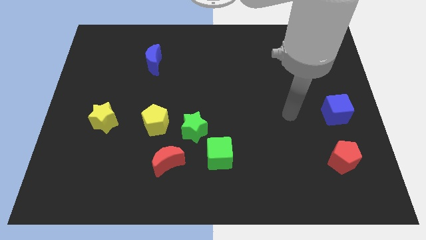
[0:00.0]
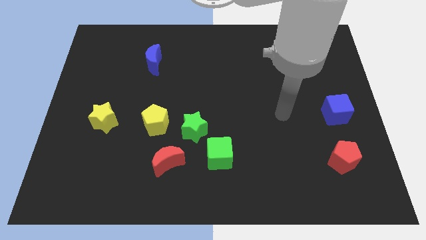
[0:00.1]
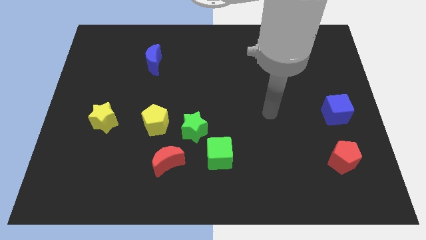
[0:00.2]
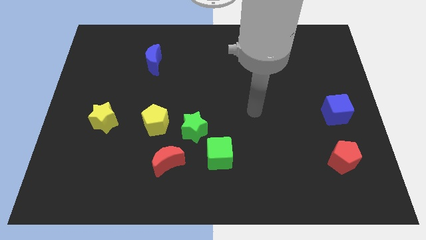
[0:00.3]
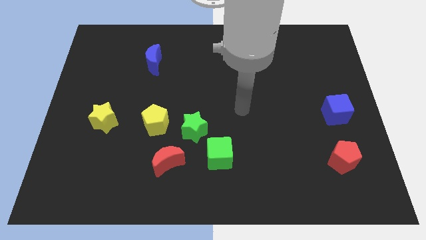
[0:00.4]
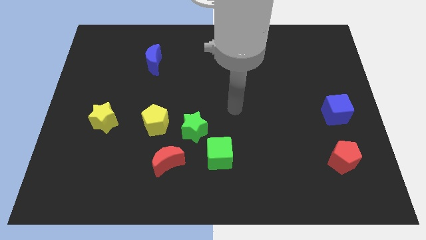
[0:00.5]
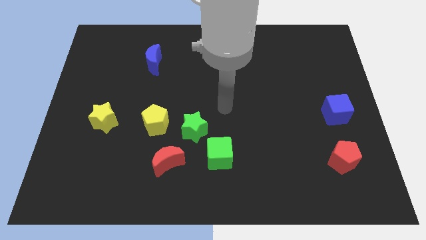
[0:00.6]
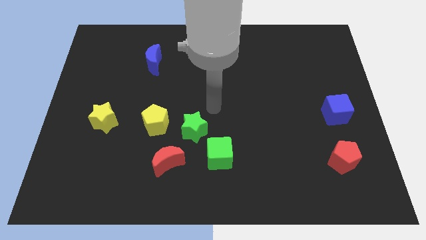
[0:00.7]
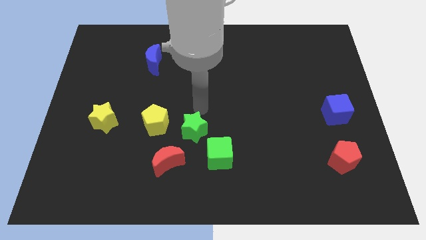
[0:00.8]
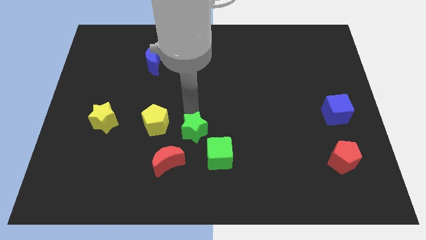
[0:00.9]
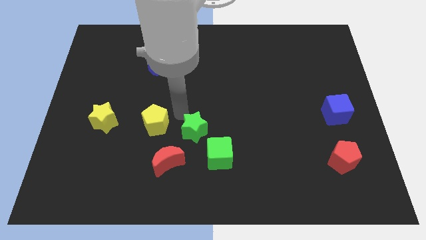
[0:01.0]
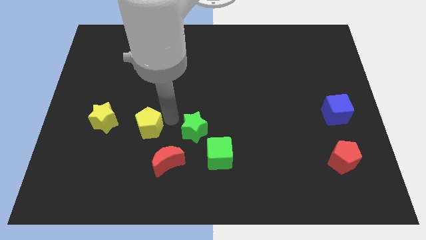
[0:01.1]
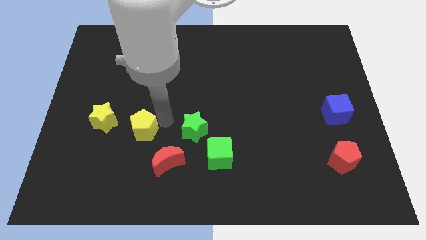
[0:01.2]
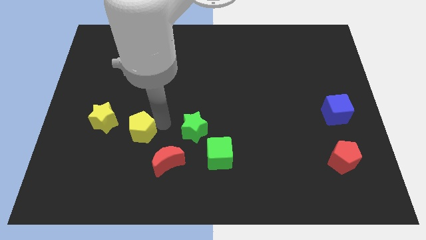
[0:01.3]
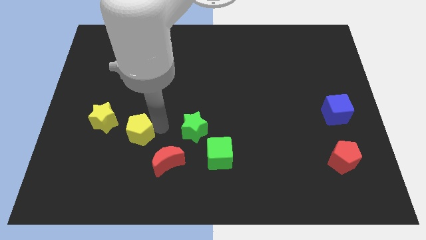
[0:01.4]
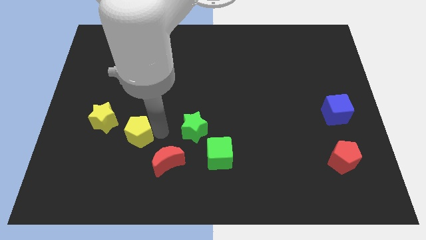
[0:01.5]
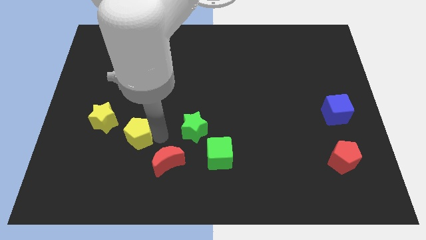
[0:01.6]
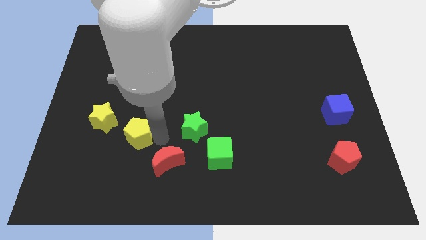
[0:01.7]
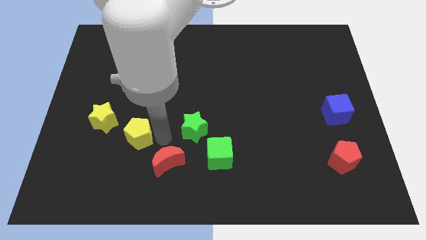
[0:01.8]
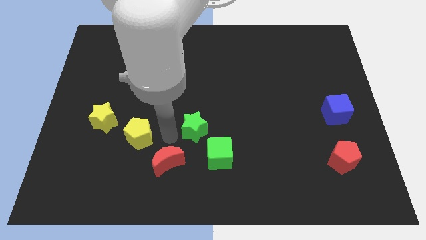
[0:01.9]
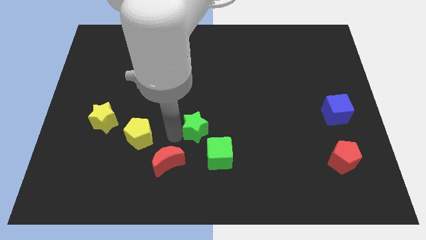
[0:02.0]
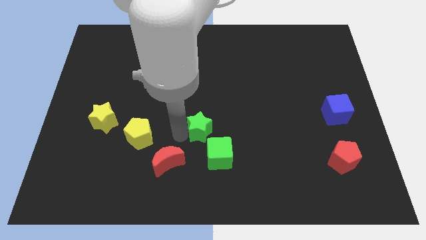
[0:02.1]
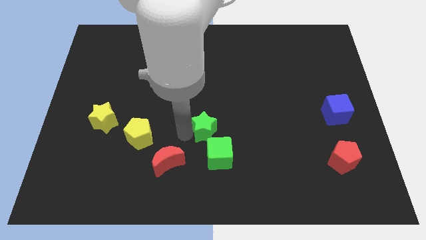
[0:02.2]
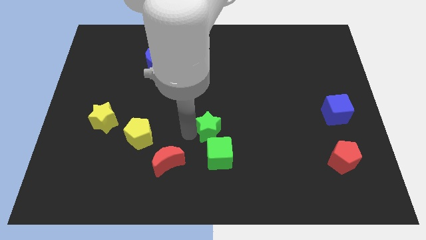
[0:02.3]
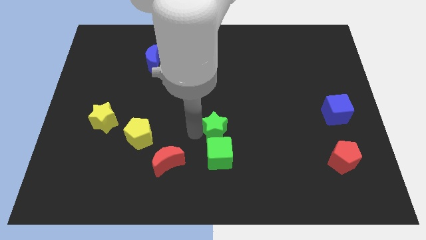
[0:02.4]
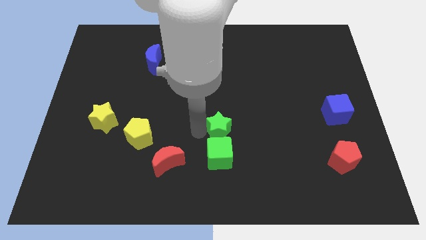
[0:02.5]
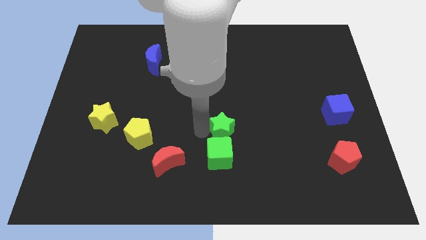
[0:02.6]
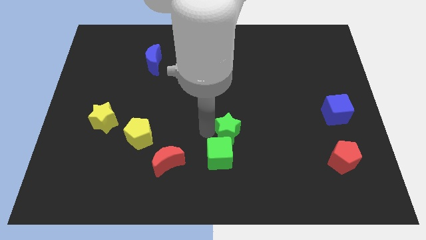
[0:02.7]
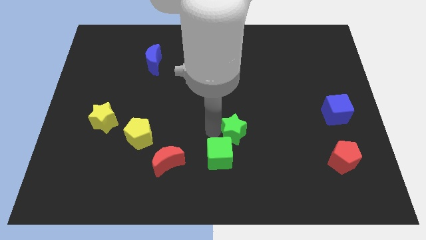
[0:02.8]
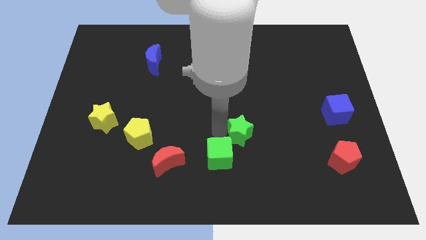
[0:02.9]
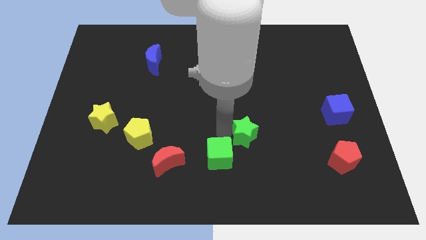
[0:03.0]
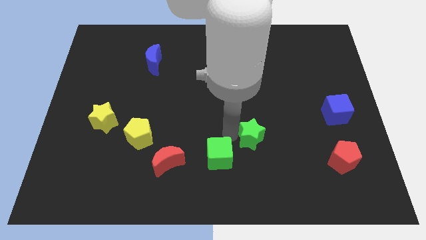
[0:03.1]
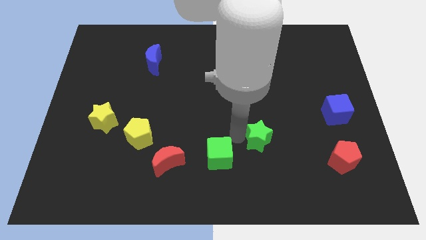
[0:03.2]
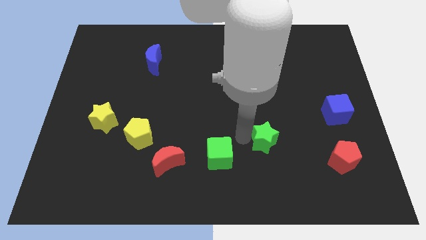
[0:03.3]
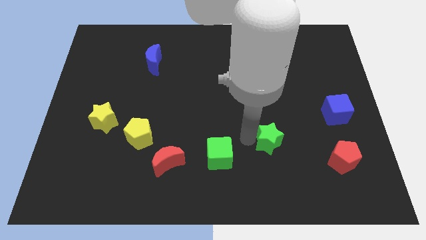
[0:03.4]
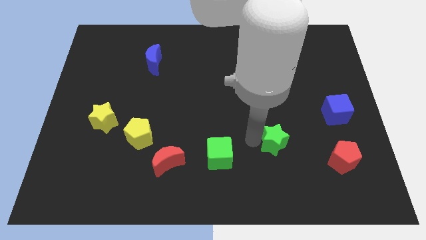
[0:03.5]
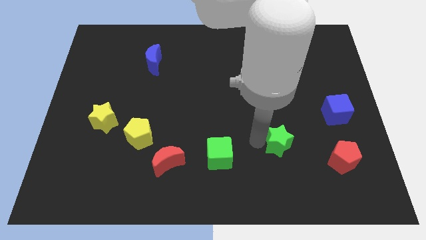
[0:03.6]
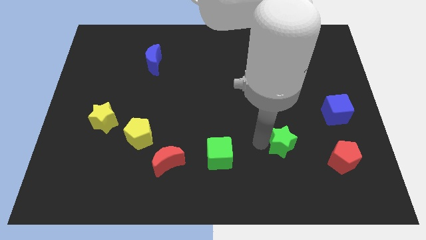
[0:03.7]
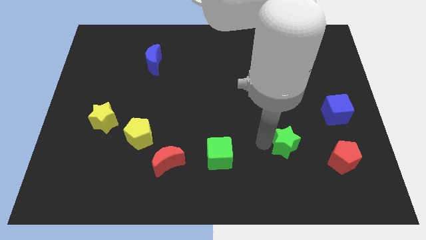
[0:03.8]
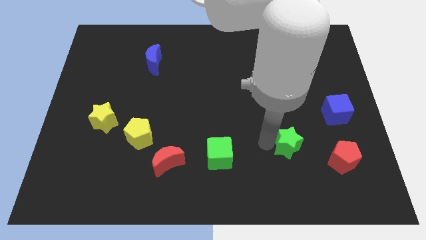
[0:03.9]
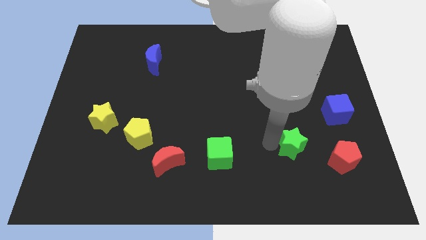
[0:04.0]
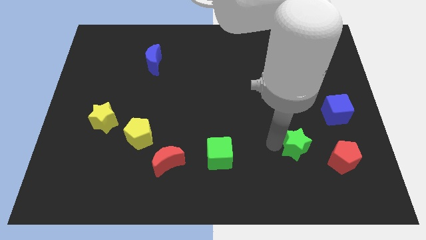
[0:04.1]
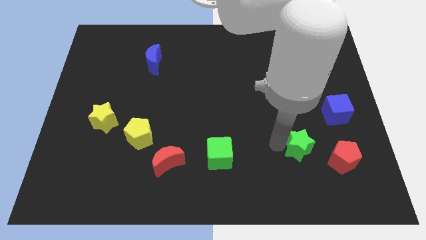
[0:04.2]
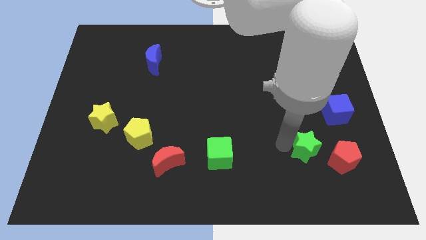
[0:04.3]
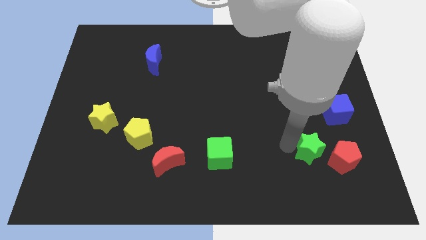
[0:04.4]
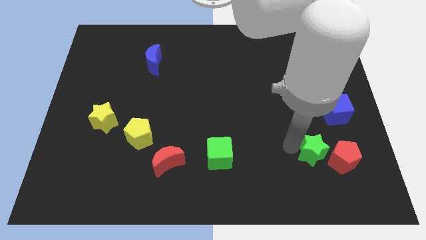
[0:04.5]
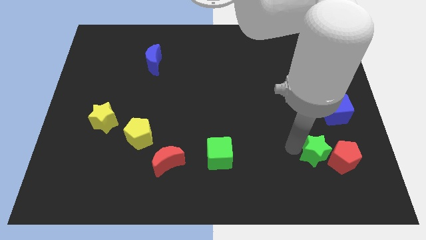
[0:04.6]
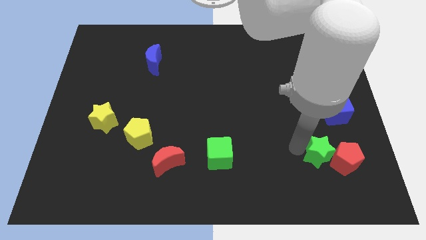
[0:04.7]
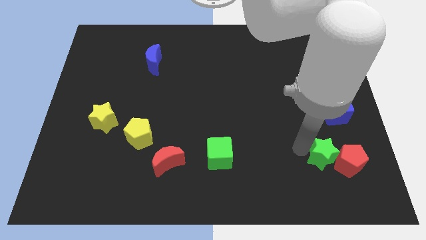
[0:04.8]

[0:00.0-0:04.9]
move the green star next to the red pentagon

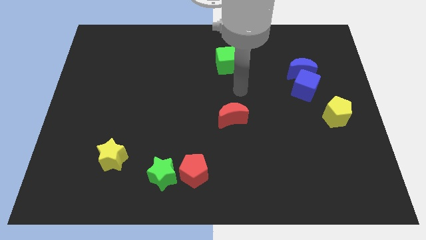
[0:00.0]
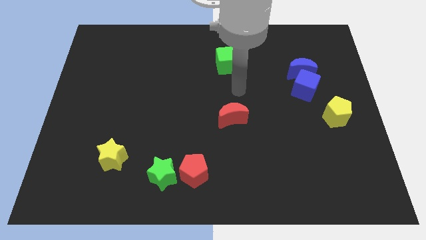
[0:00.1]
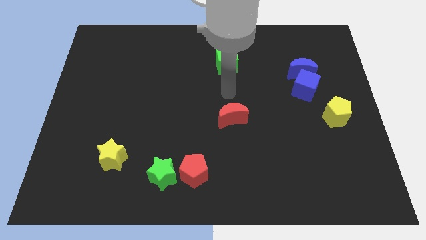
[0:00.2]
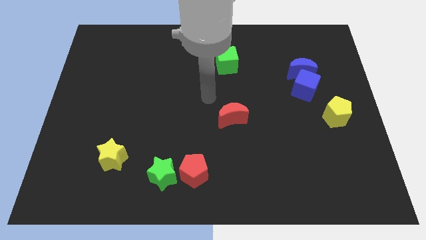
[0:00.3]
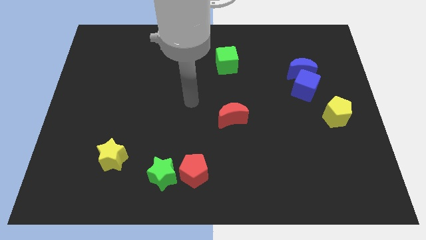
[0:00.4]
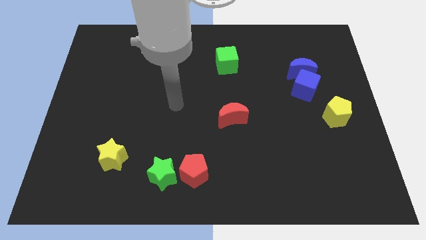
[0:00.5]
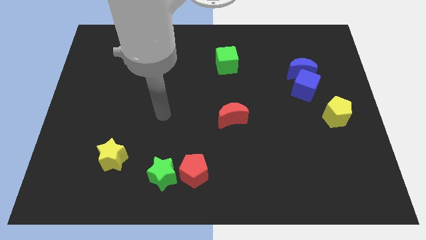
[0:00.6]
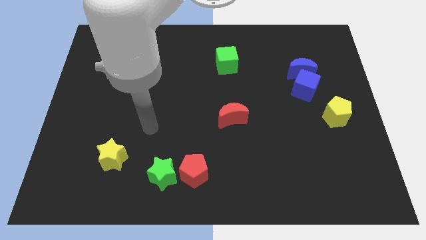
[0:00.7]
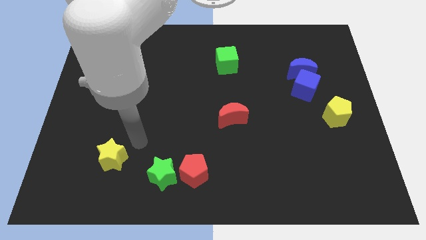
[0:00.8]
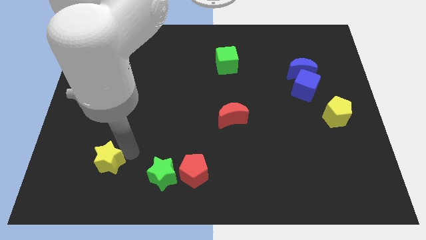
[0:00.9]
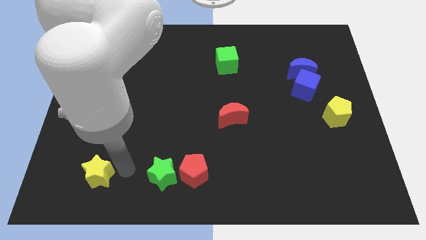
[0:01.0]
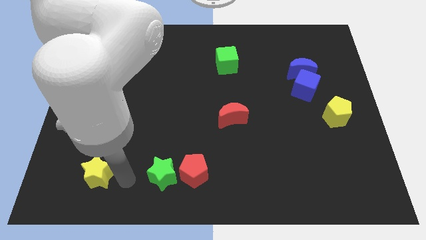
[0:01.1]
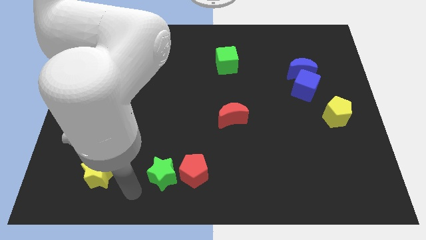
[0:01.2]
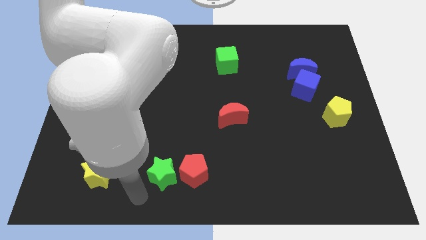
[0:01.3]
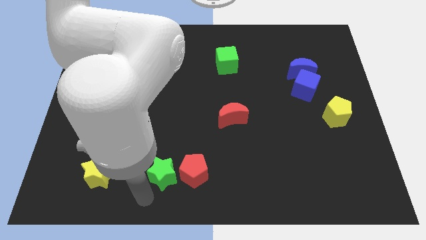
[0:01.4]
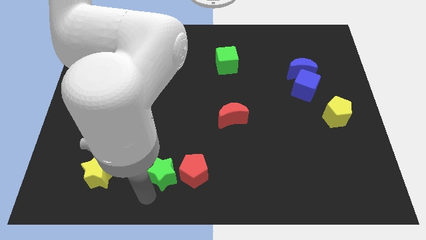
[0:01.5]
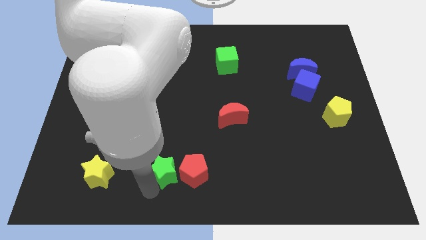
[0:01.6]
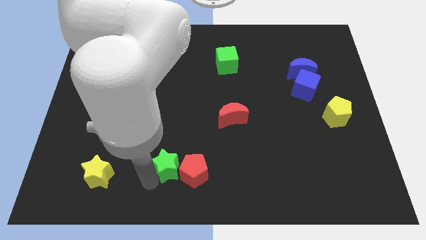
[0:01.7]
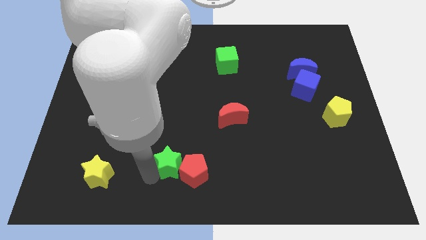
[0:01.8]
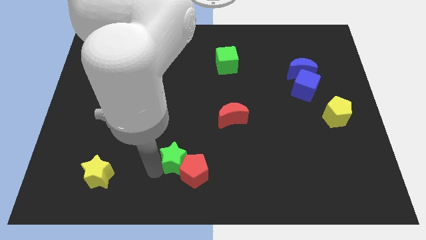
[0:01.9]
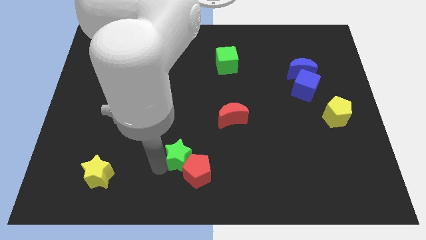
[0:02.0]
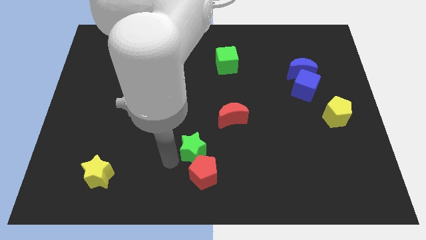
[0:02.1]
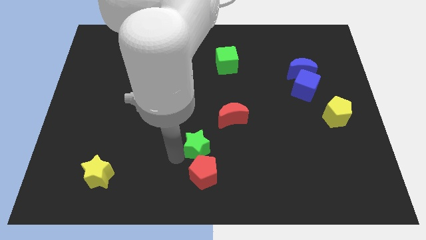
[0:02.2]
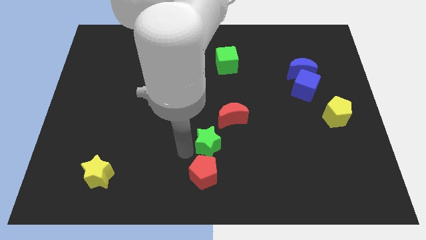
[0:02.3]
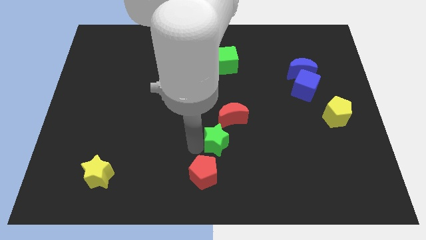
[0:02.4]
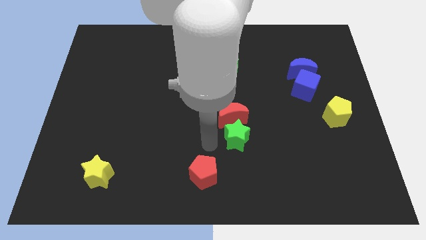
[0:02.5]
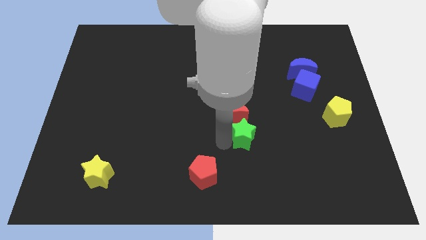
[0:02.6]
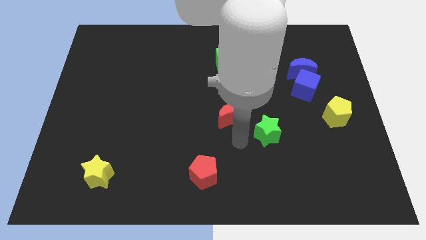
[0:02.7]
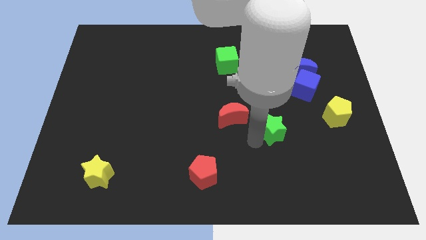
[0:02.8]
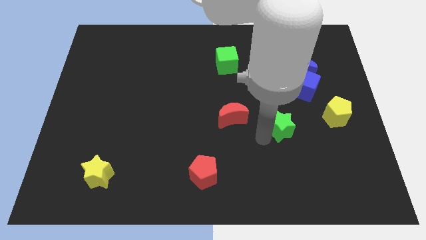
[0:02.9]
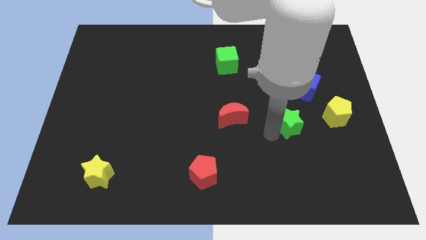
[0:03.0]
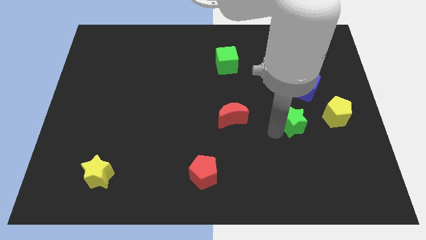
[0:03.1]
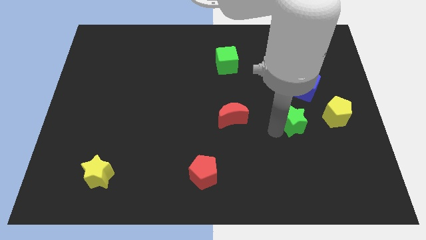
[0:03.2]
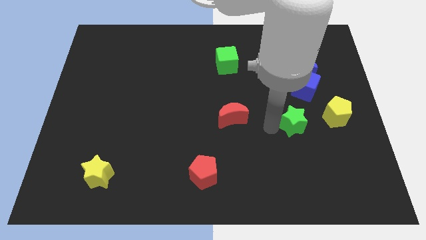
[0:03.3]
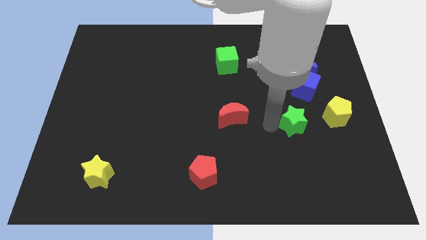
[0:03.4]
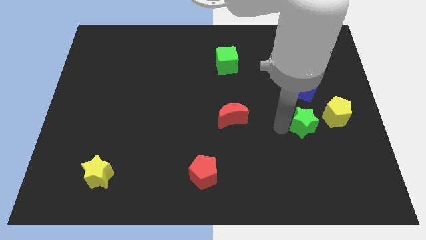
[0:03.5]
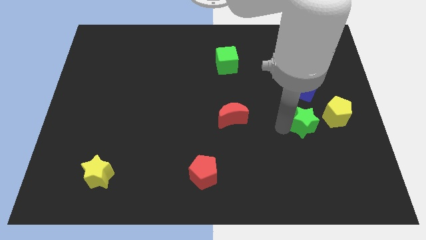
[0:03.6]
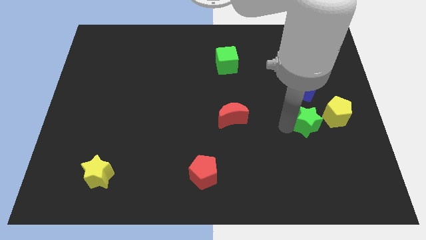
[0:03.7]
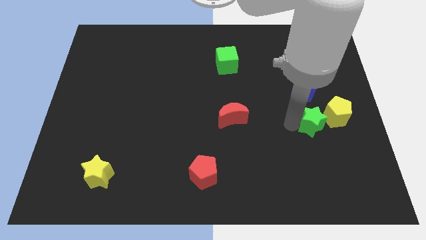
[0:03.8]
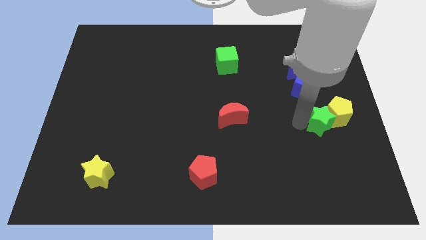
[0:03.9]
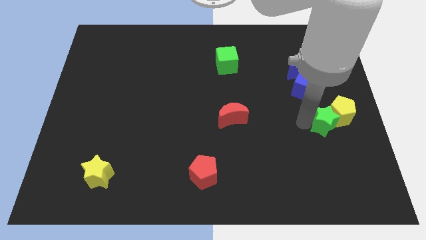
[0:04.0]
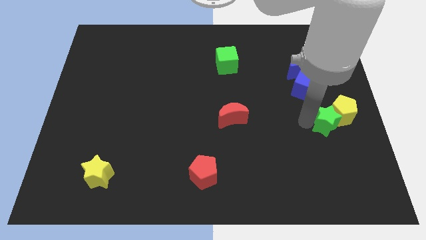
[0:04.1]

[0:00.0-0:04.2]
slide the green star close to the yellow pentagon
